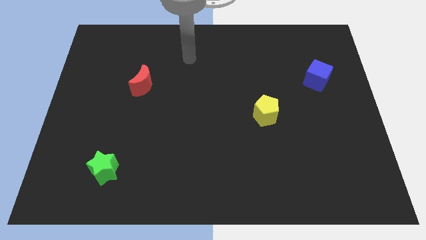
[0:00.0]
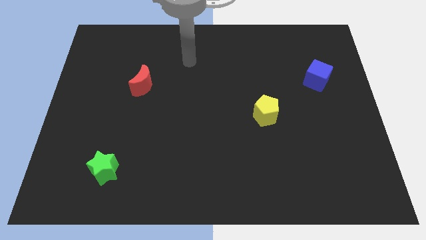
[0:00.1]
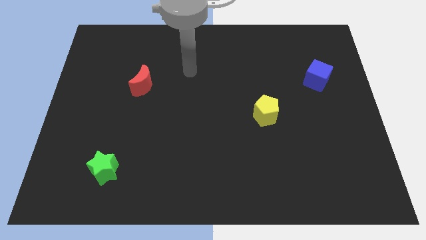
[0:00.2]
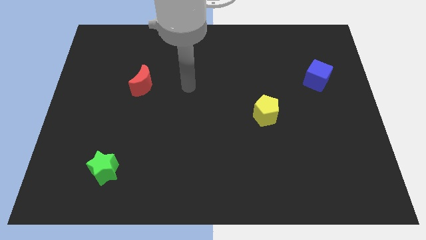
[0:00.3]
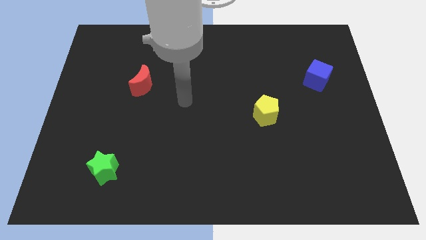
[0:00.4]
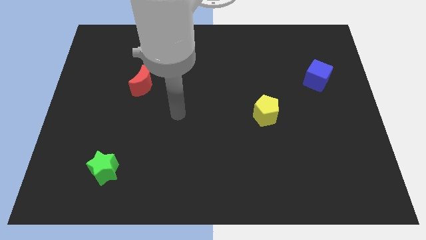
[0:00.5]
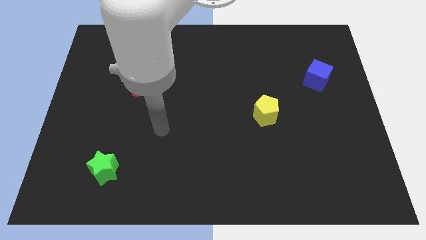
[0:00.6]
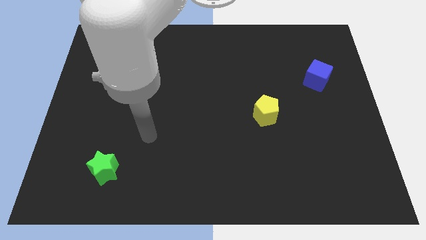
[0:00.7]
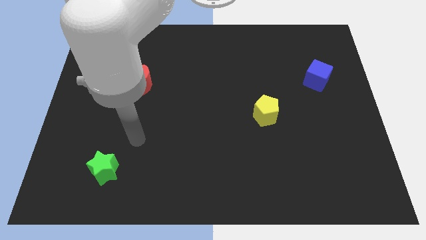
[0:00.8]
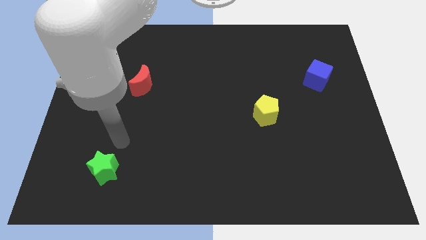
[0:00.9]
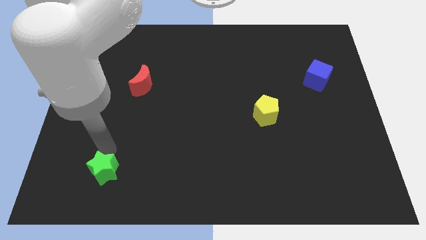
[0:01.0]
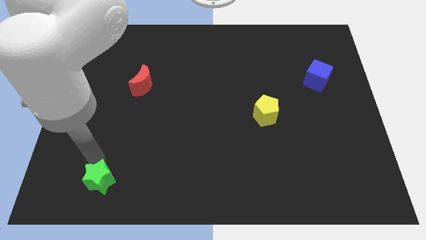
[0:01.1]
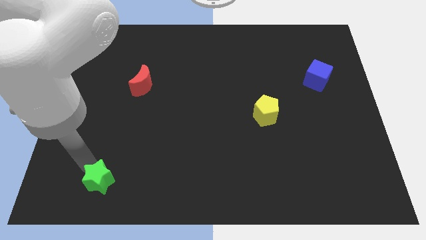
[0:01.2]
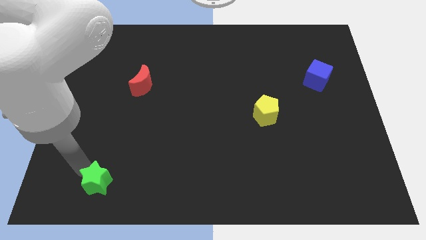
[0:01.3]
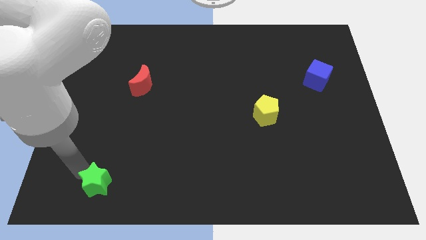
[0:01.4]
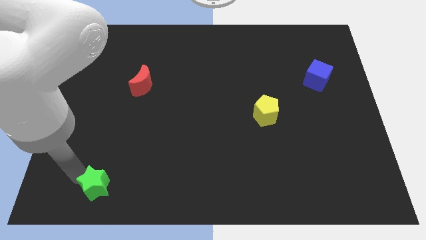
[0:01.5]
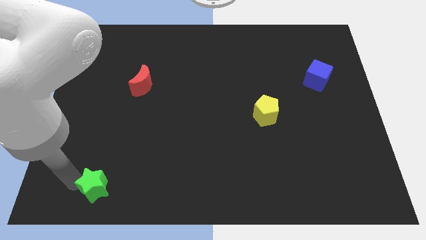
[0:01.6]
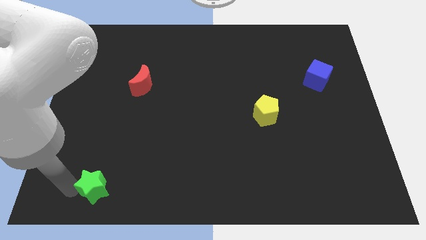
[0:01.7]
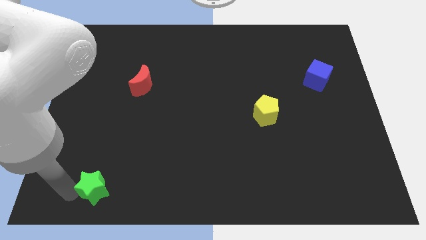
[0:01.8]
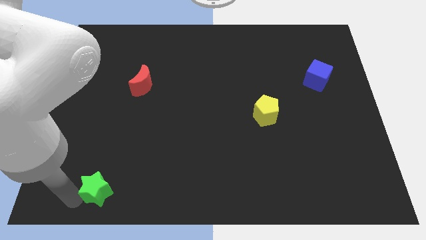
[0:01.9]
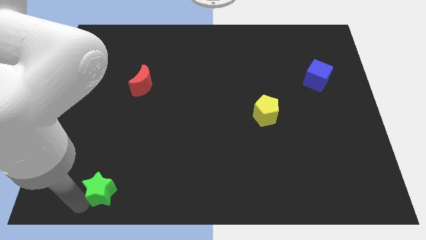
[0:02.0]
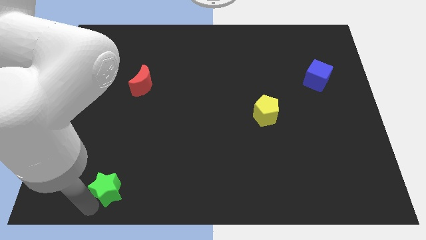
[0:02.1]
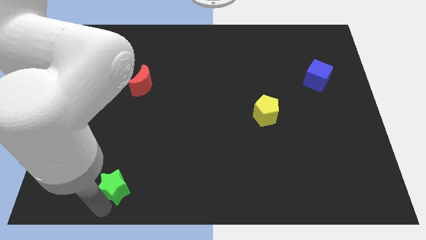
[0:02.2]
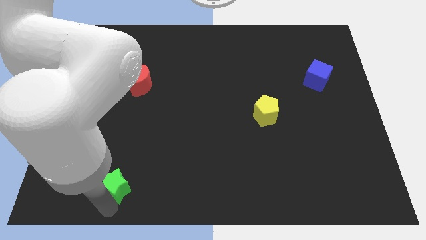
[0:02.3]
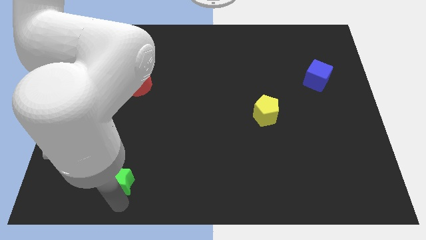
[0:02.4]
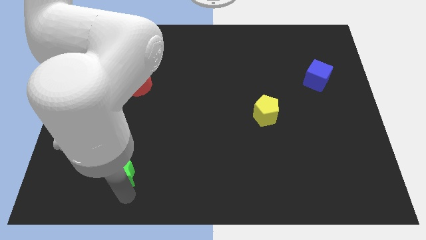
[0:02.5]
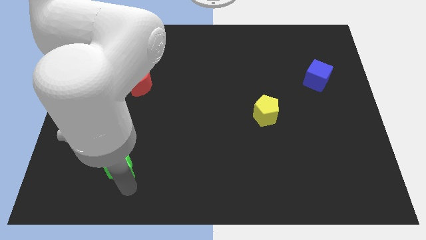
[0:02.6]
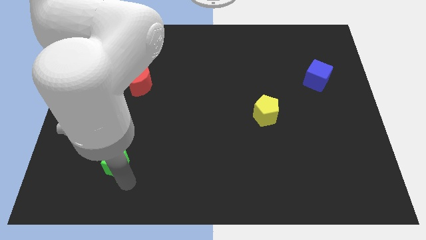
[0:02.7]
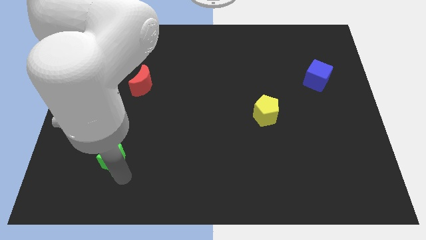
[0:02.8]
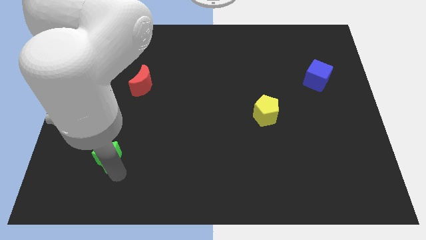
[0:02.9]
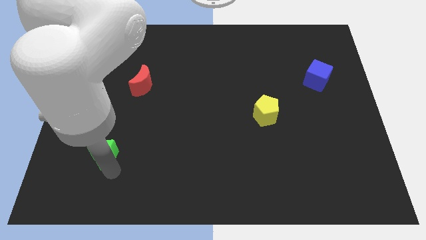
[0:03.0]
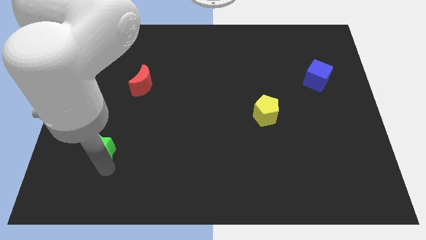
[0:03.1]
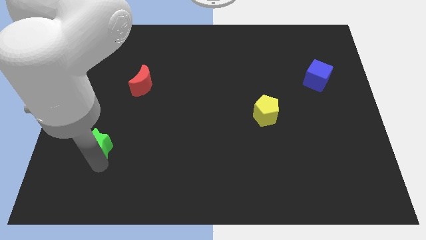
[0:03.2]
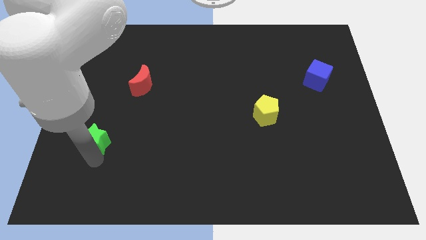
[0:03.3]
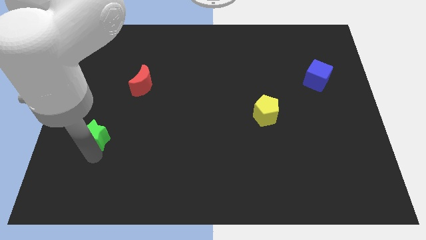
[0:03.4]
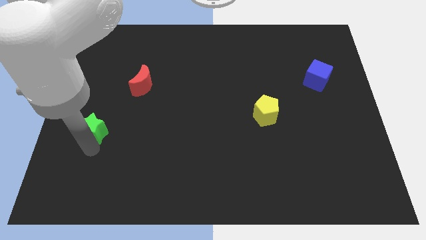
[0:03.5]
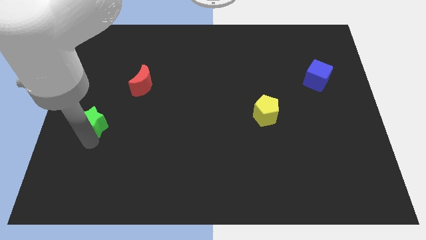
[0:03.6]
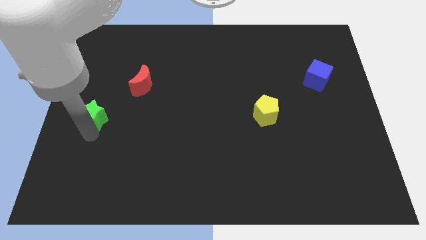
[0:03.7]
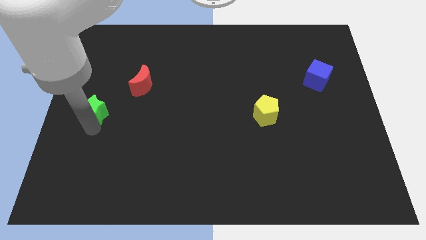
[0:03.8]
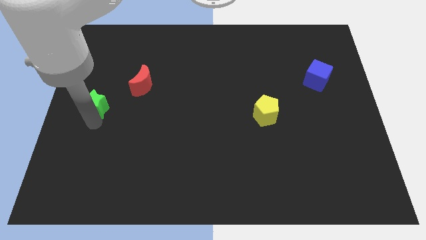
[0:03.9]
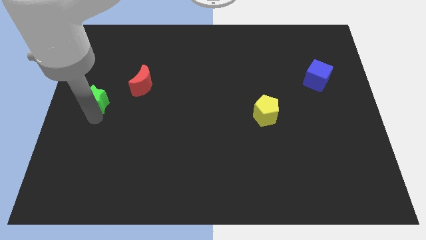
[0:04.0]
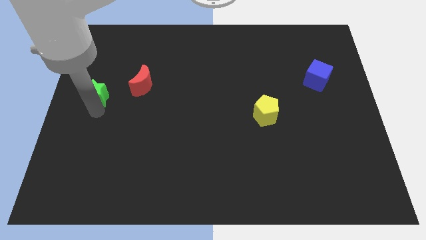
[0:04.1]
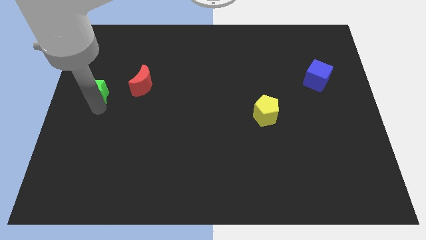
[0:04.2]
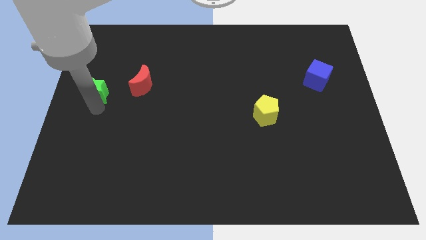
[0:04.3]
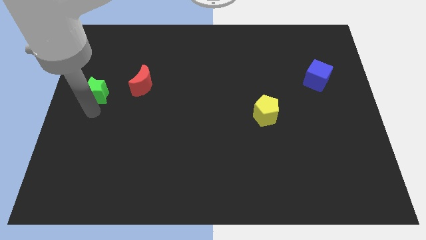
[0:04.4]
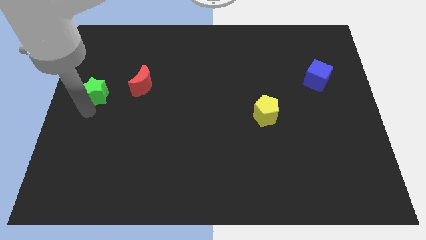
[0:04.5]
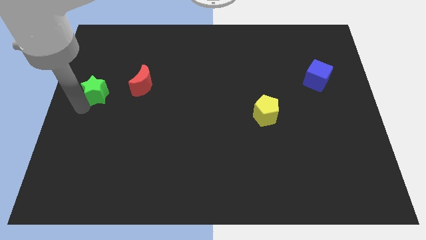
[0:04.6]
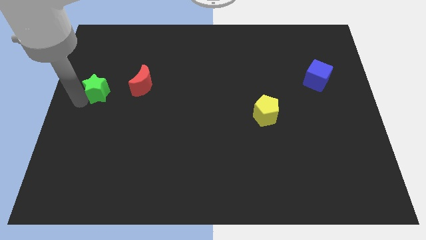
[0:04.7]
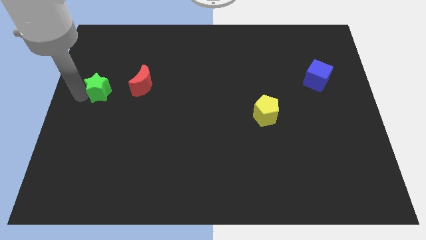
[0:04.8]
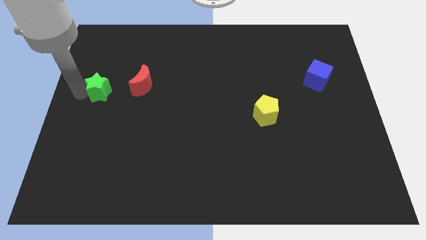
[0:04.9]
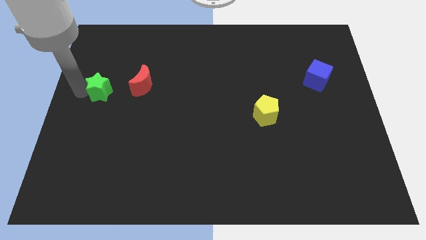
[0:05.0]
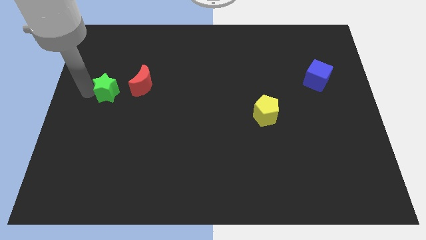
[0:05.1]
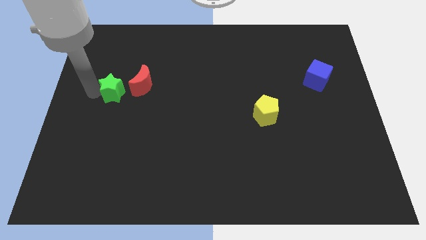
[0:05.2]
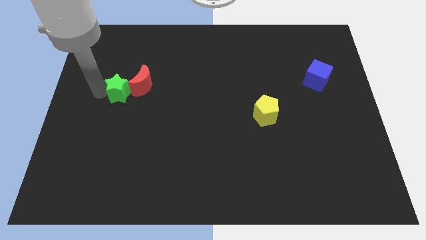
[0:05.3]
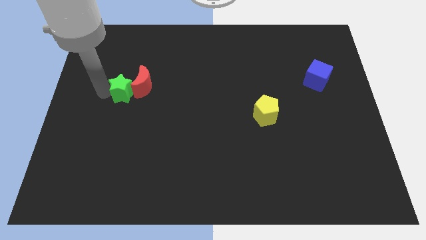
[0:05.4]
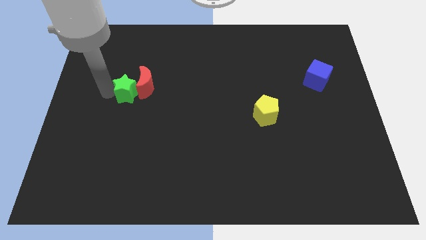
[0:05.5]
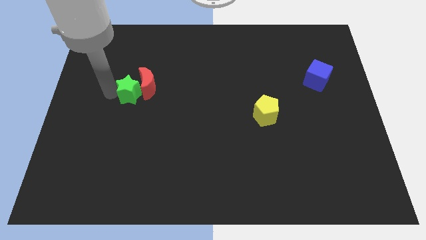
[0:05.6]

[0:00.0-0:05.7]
push the green block close to the red block

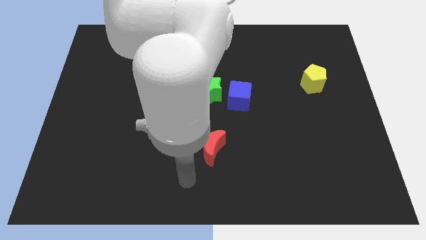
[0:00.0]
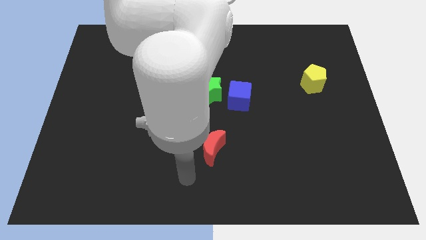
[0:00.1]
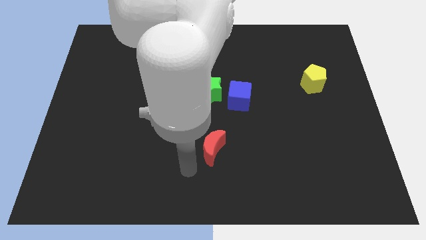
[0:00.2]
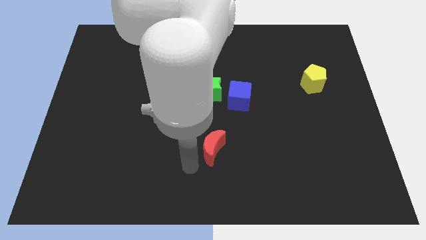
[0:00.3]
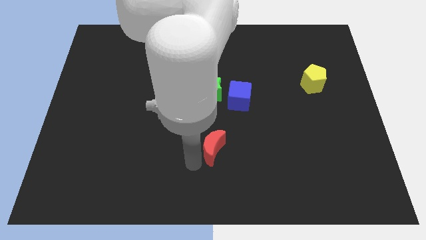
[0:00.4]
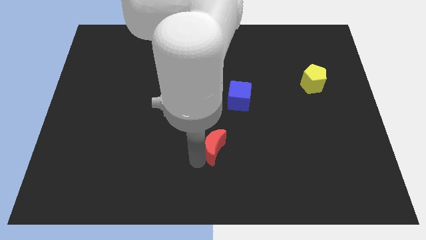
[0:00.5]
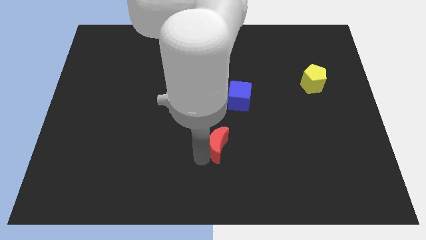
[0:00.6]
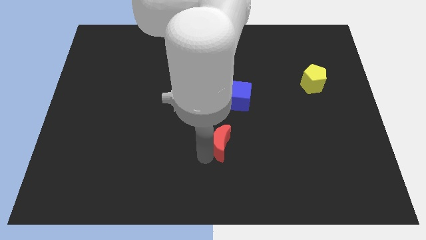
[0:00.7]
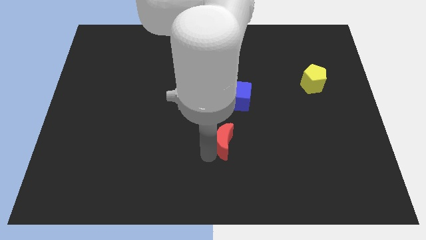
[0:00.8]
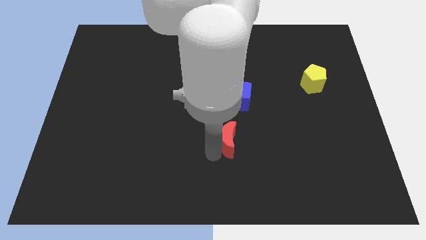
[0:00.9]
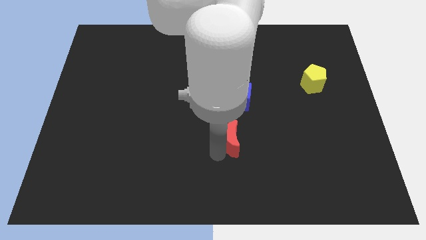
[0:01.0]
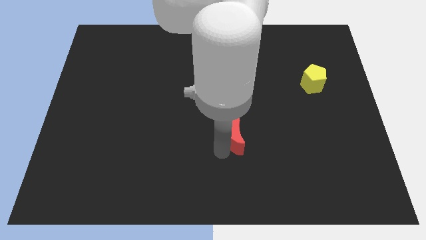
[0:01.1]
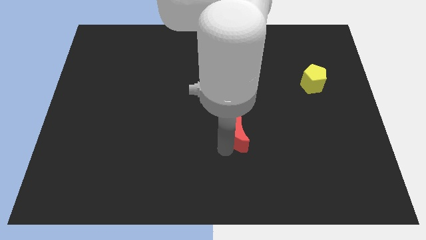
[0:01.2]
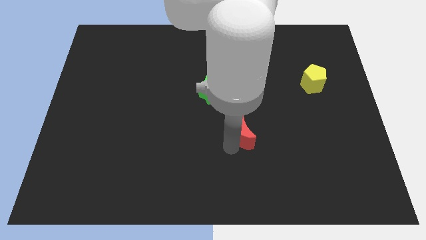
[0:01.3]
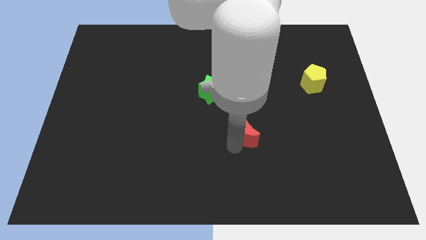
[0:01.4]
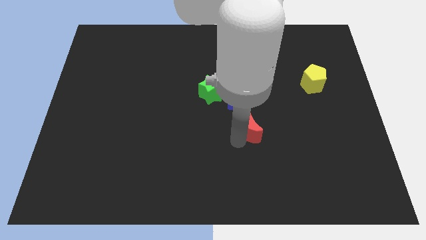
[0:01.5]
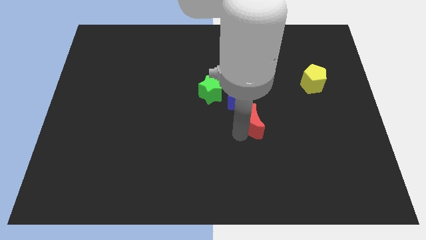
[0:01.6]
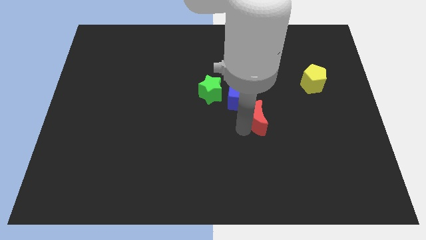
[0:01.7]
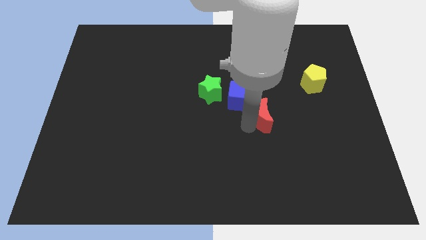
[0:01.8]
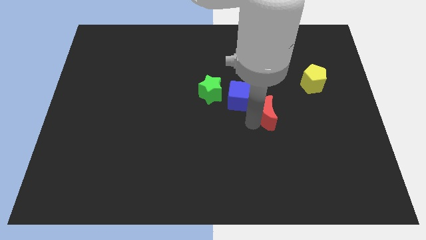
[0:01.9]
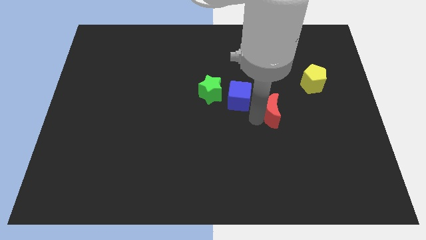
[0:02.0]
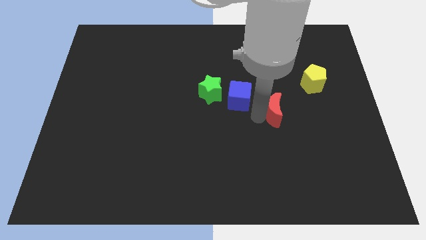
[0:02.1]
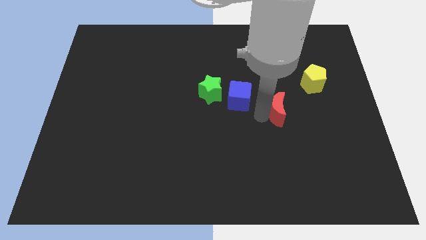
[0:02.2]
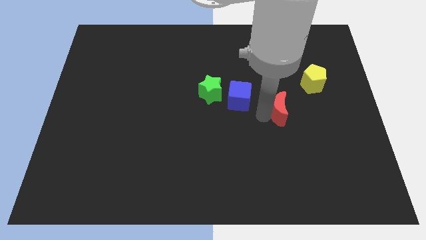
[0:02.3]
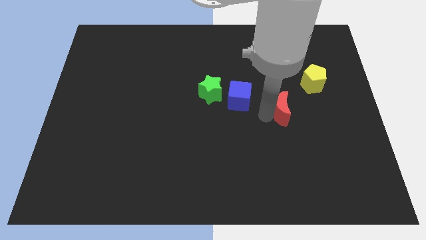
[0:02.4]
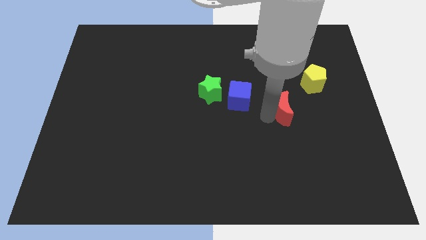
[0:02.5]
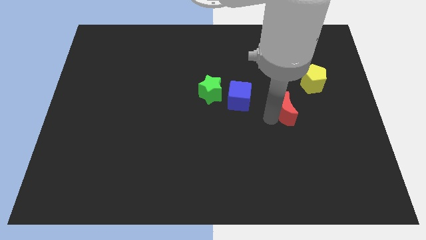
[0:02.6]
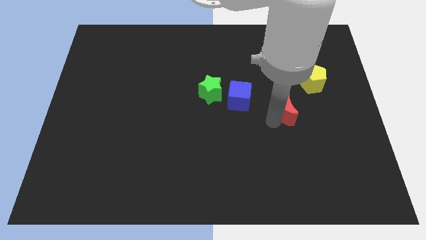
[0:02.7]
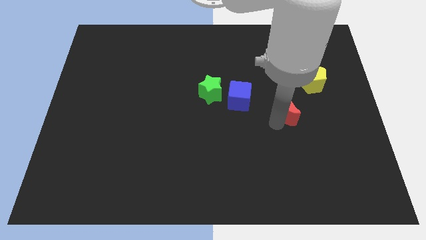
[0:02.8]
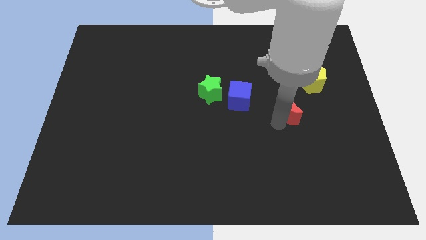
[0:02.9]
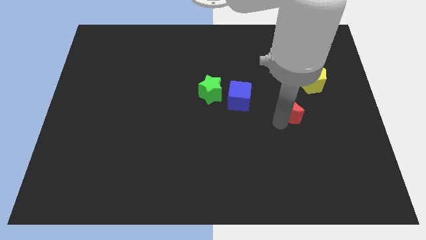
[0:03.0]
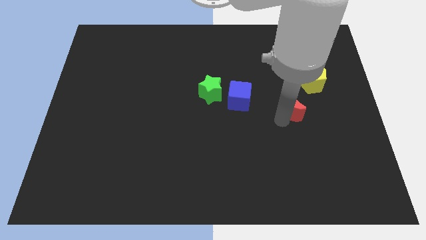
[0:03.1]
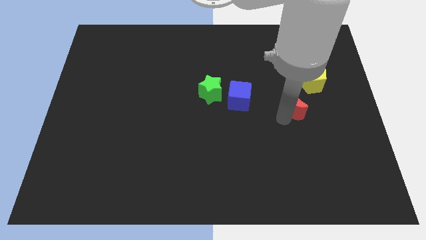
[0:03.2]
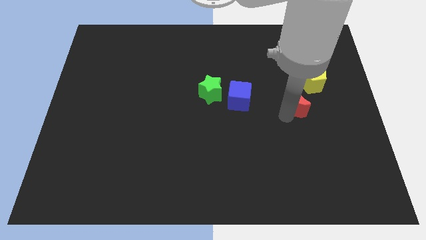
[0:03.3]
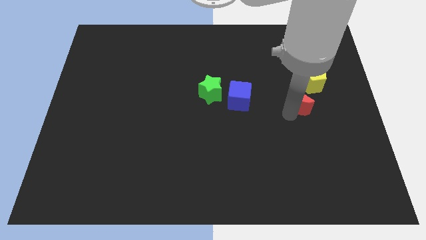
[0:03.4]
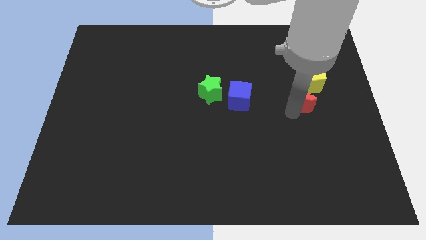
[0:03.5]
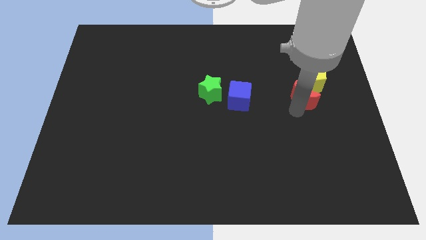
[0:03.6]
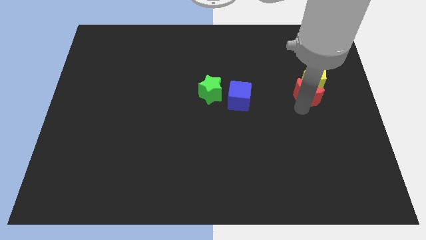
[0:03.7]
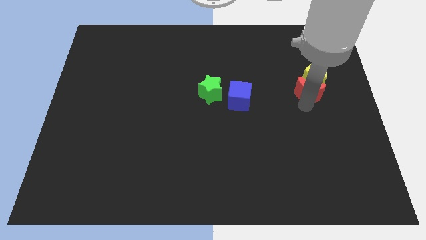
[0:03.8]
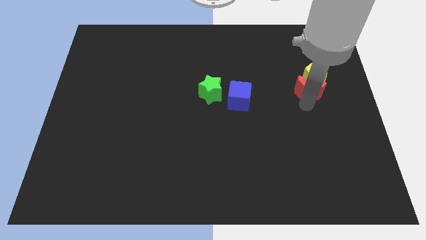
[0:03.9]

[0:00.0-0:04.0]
put the red block close to the pentagon
